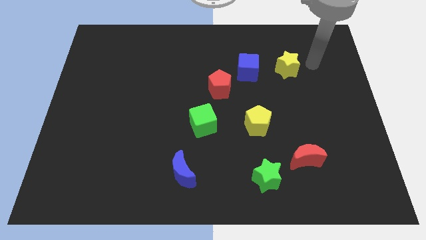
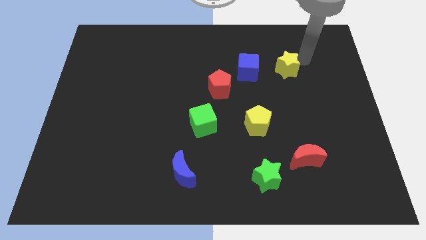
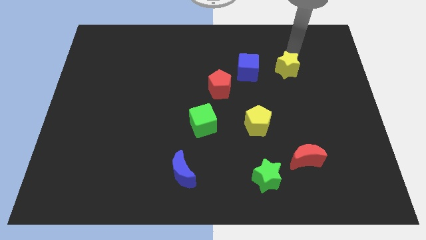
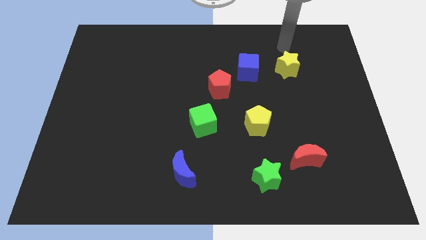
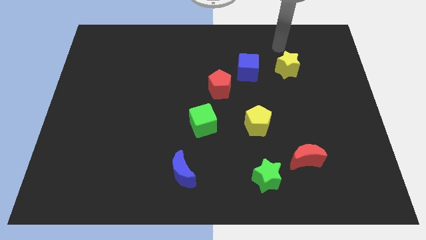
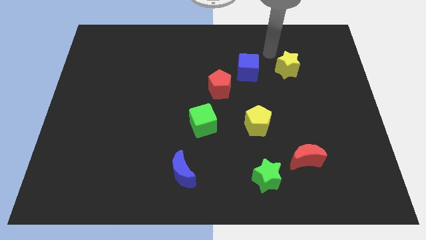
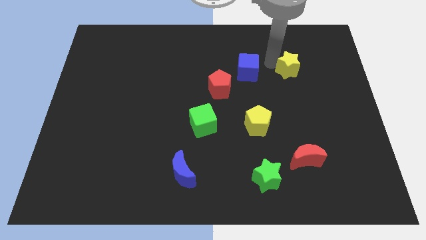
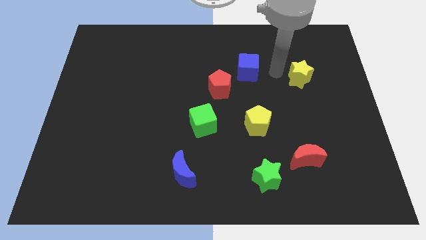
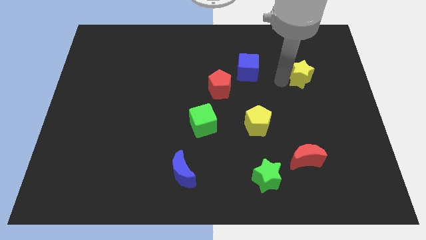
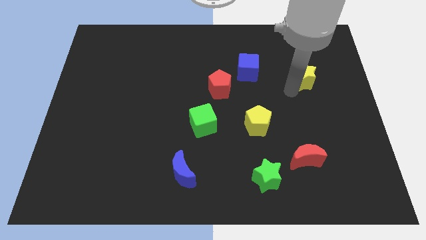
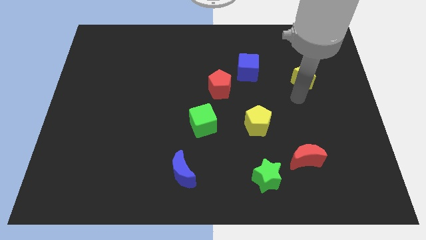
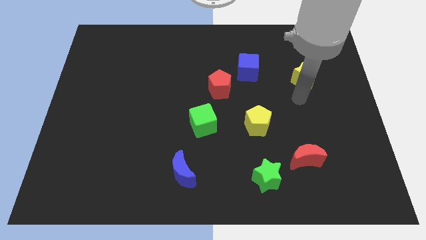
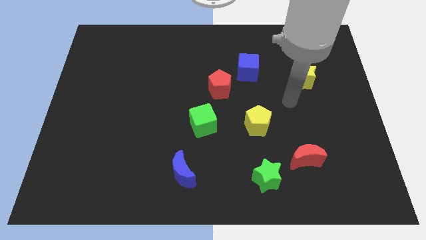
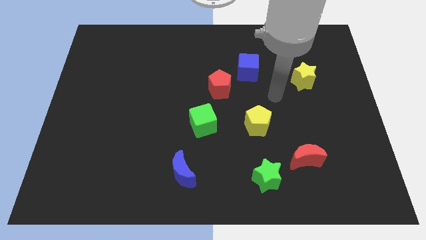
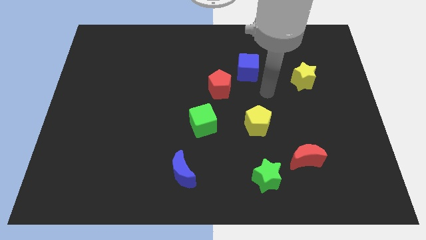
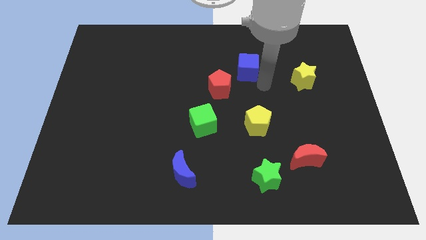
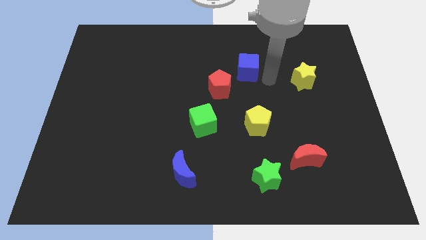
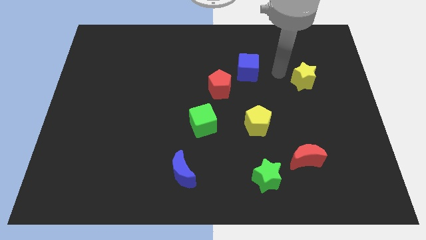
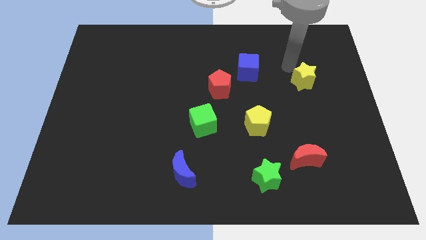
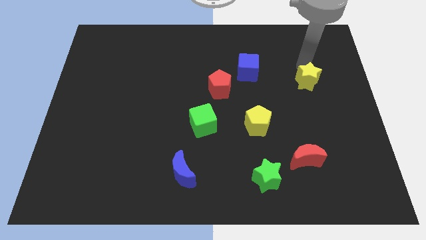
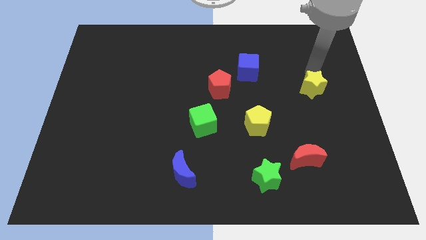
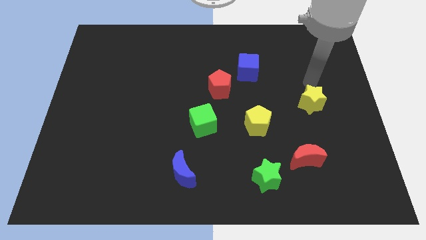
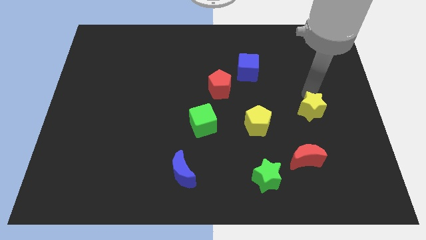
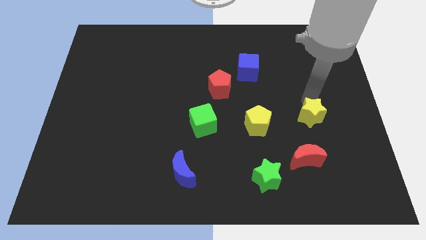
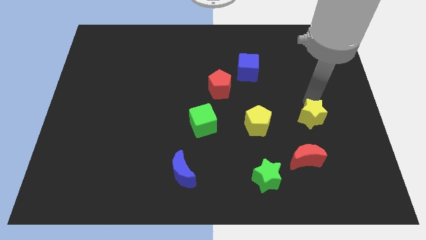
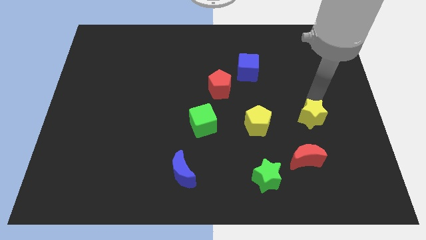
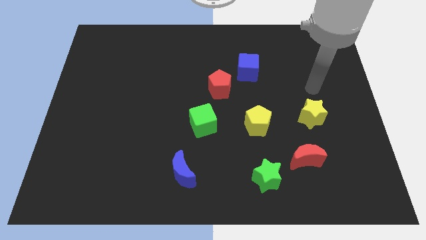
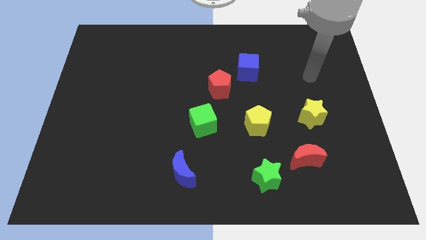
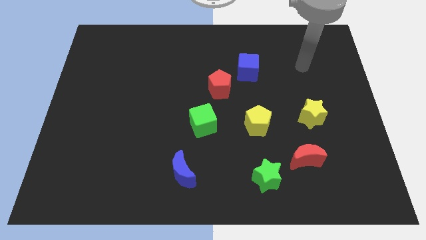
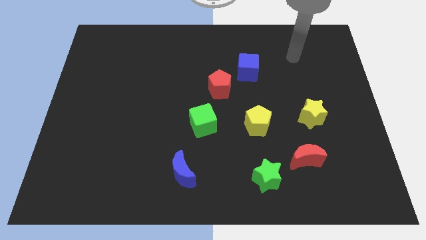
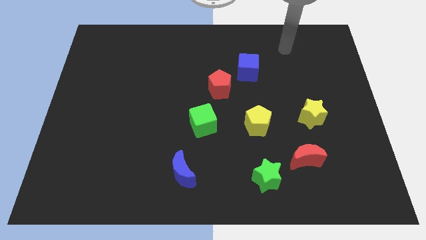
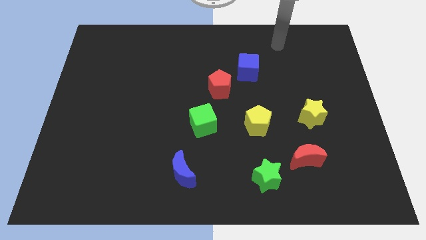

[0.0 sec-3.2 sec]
place the yellow star above the red moon

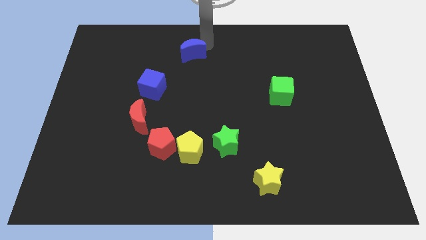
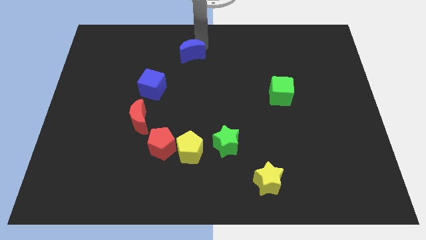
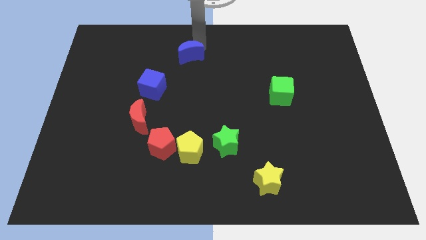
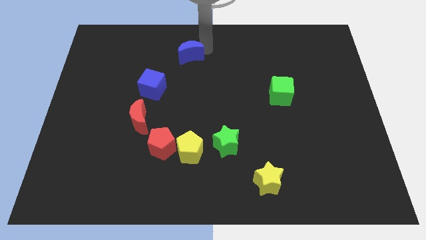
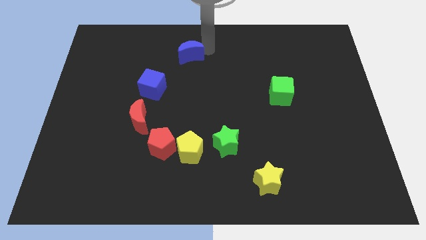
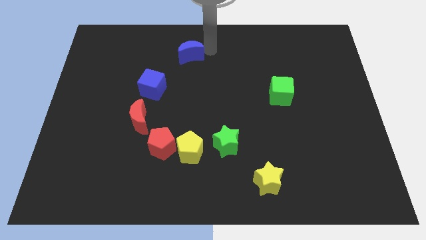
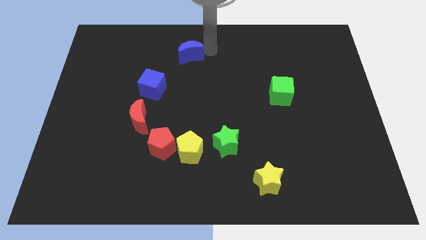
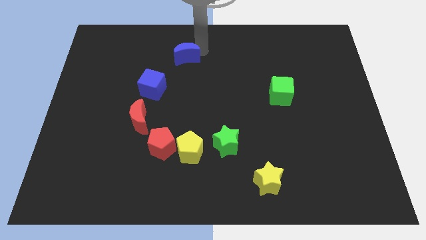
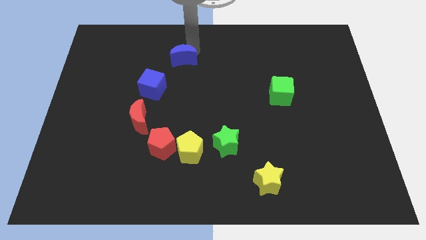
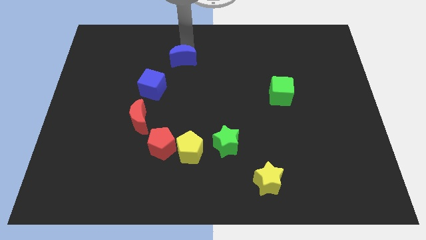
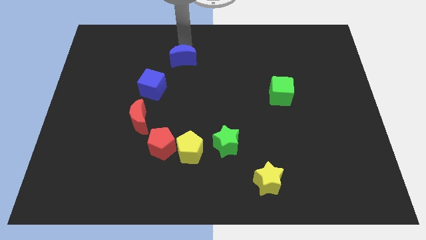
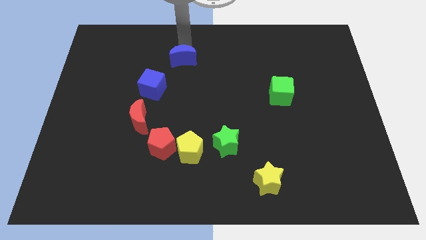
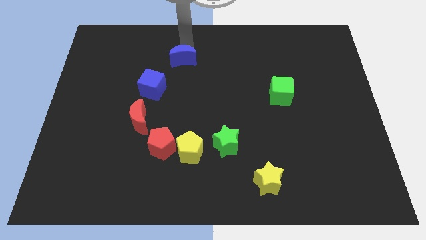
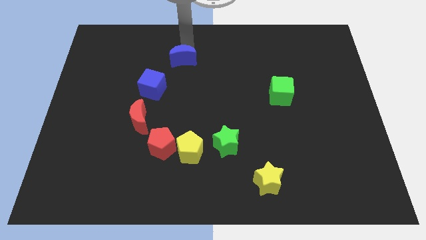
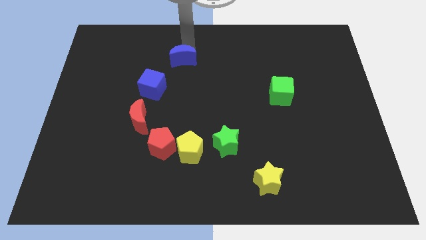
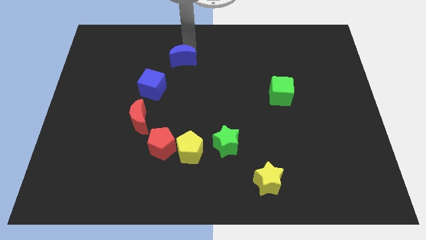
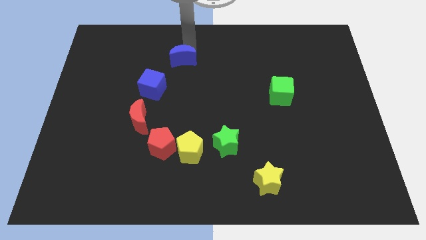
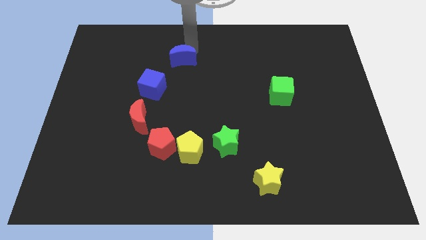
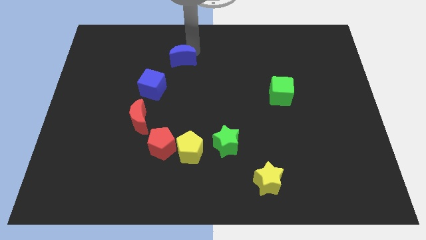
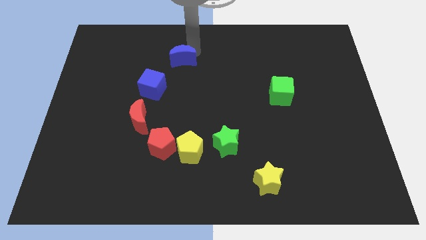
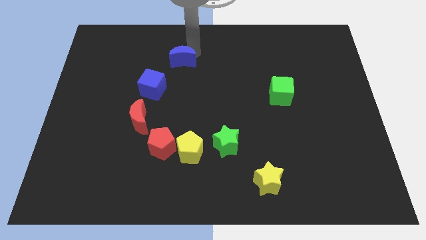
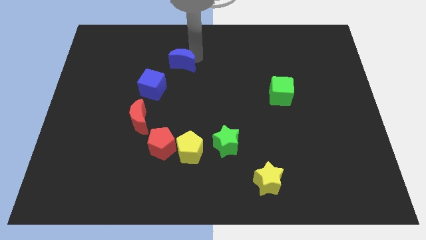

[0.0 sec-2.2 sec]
move the blue crescent above the blue cube

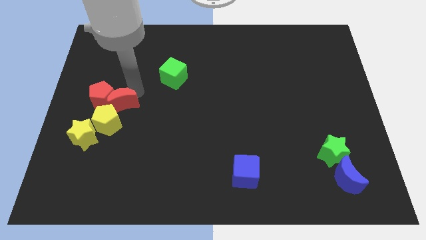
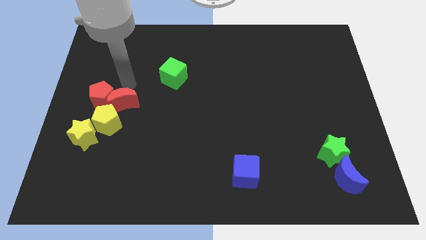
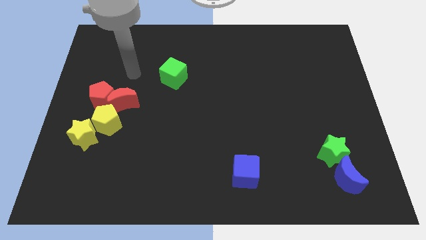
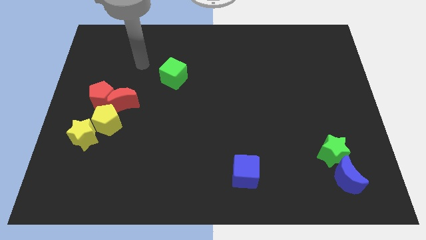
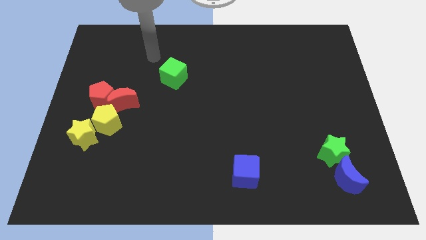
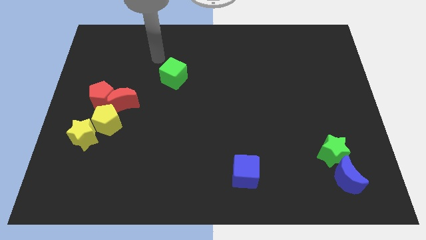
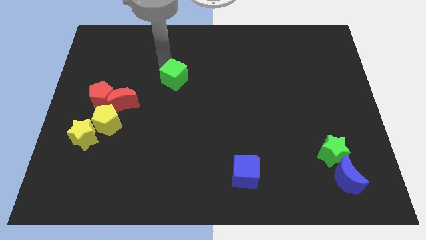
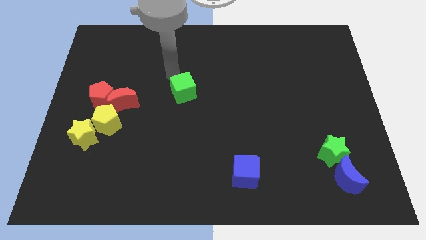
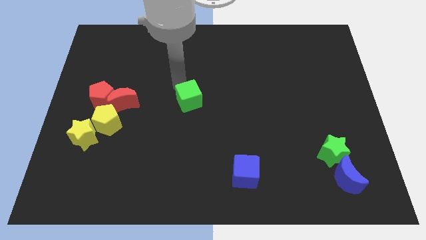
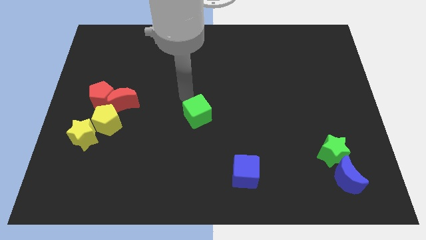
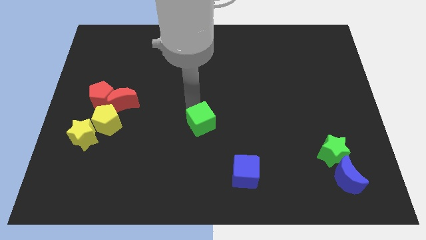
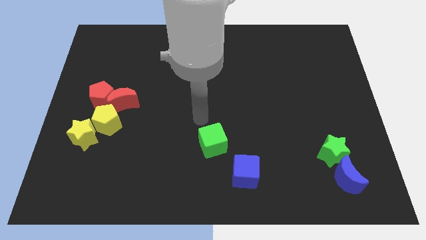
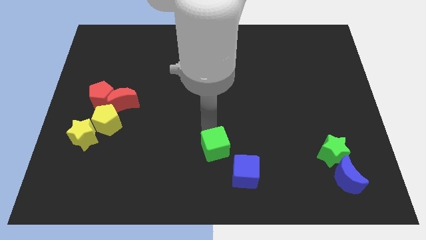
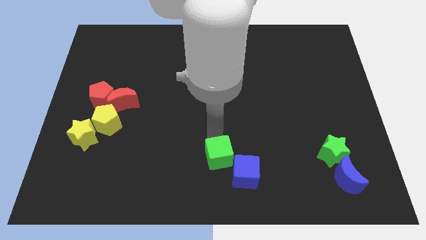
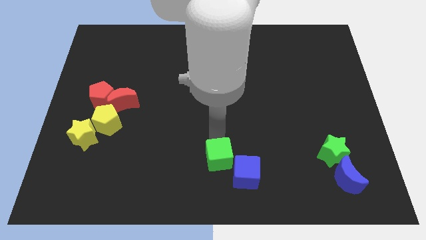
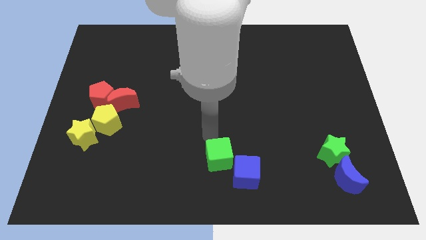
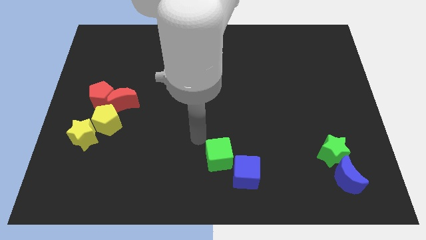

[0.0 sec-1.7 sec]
push the green cube into the blue cube

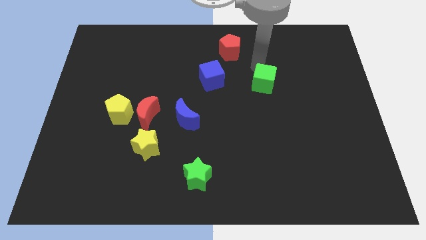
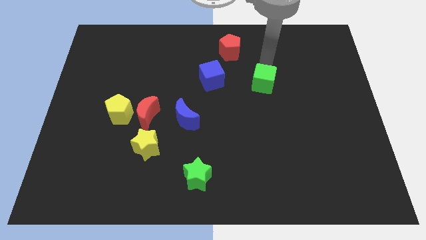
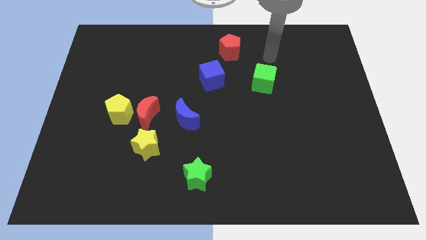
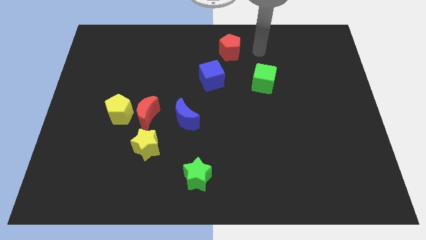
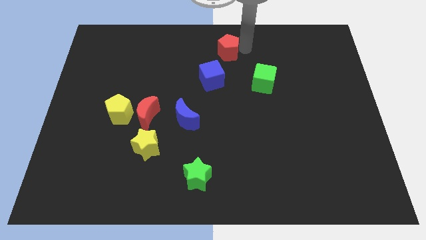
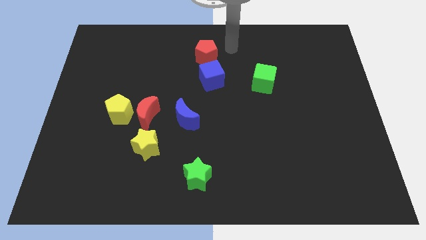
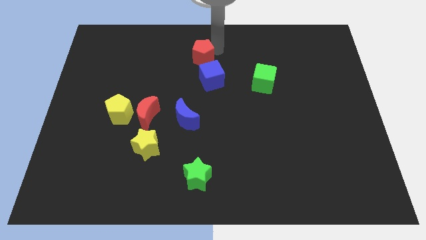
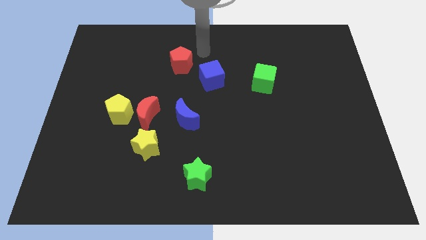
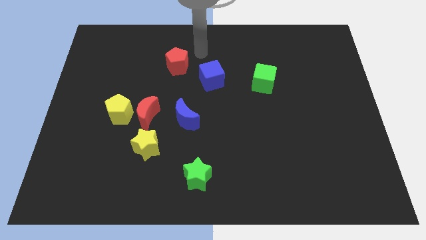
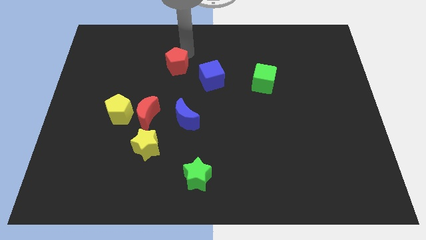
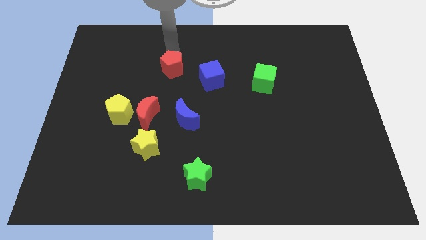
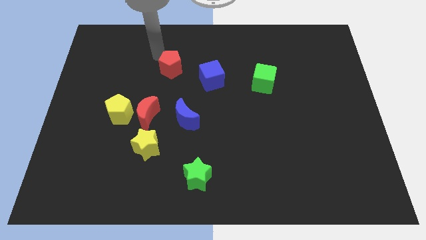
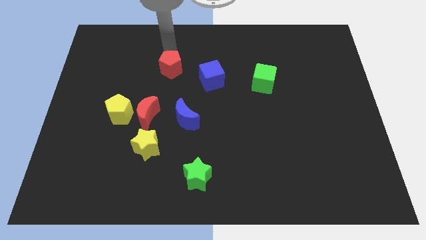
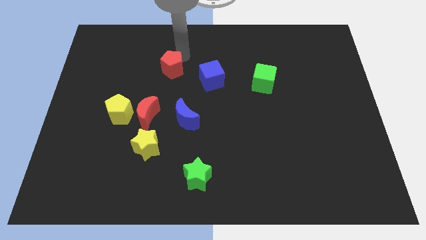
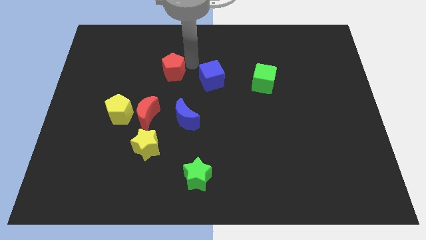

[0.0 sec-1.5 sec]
move the red pentagon towards the red crescent

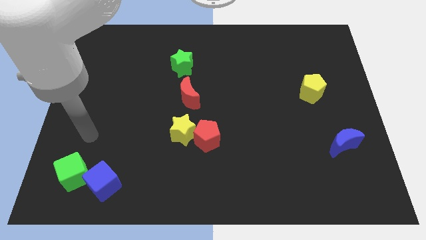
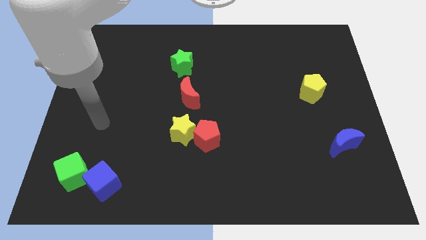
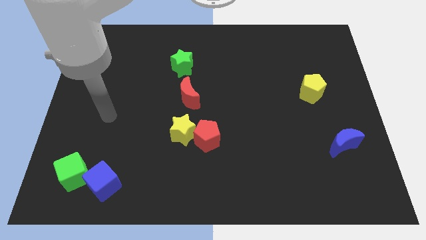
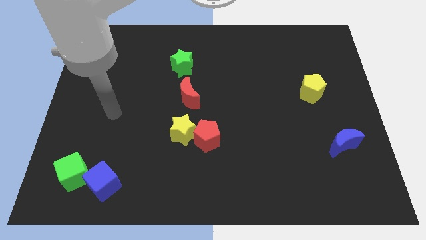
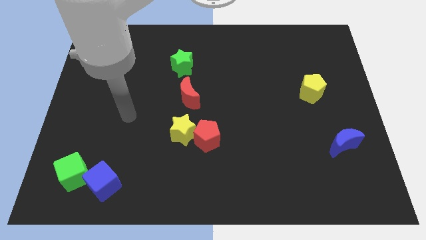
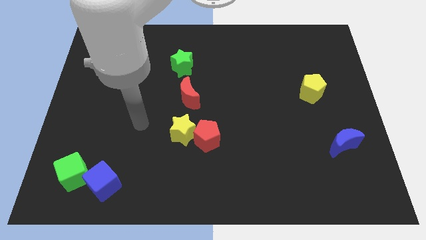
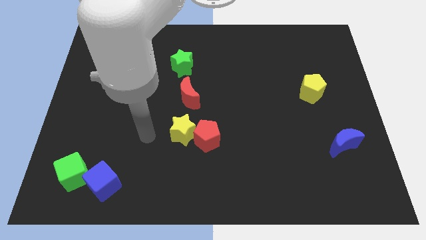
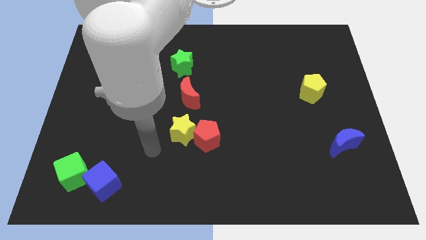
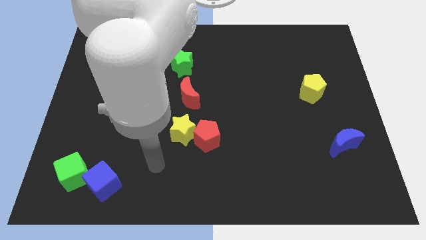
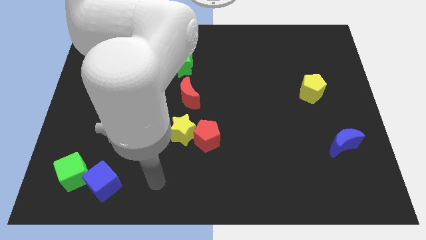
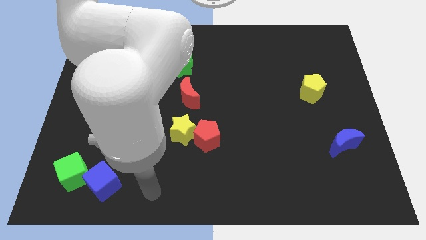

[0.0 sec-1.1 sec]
move arm away from green cube
